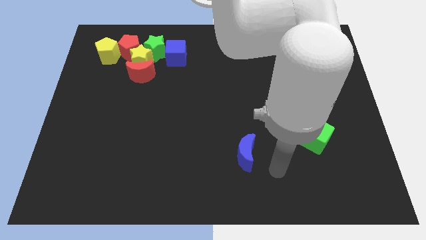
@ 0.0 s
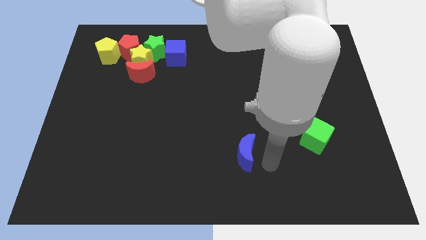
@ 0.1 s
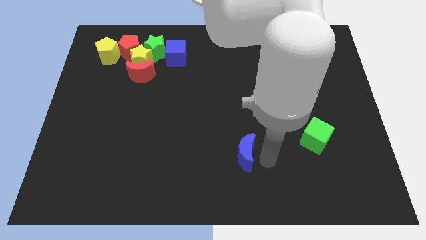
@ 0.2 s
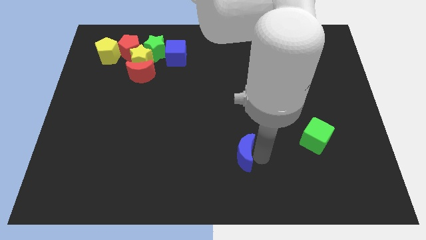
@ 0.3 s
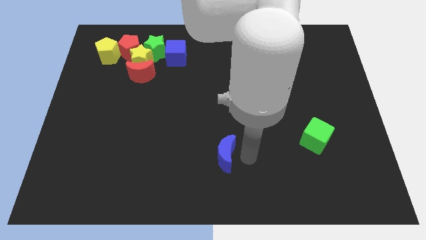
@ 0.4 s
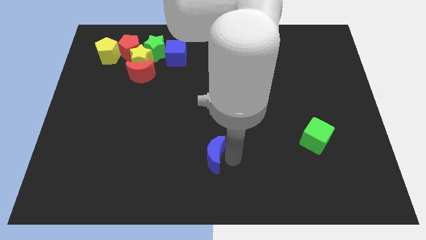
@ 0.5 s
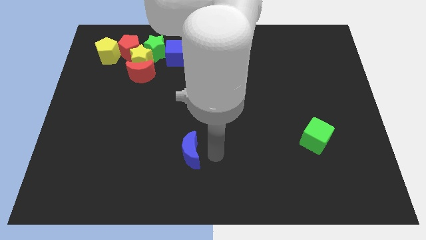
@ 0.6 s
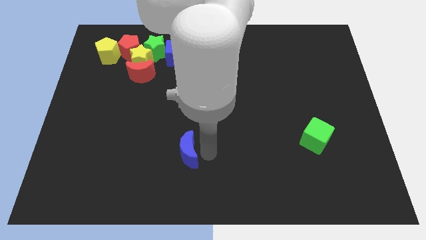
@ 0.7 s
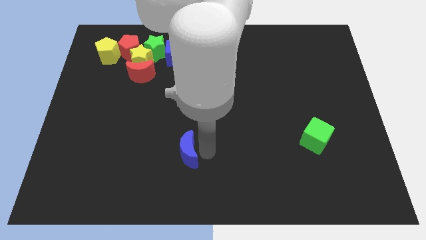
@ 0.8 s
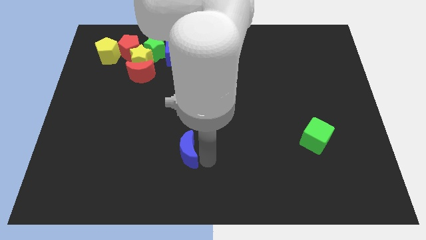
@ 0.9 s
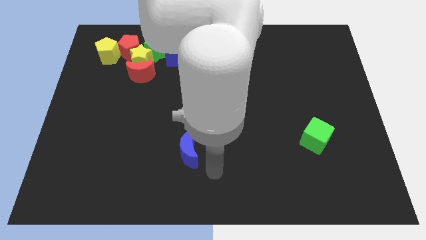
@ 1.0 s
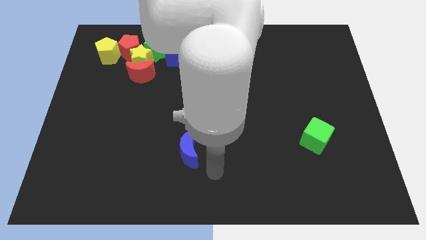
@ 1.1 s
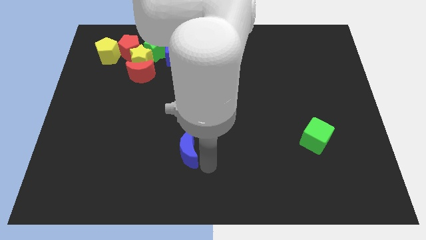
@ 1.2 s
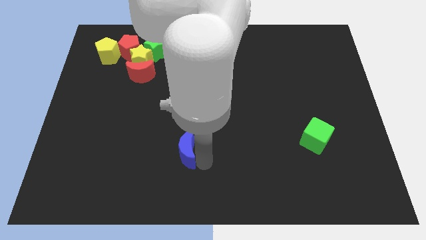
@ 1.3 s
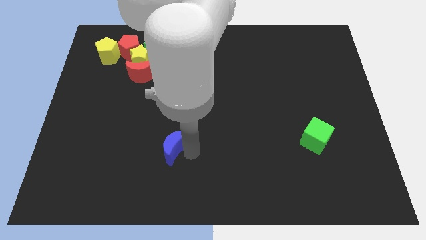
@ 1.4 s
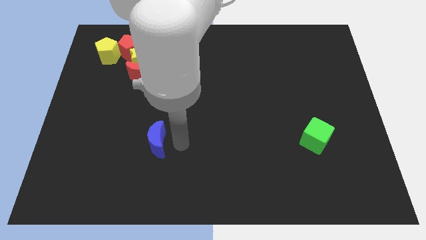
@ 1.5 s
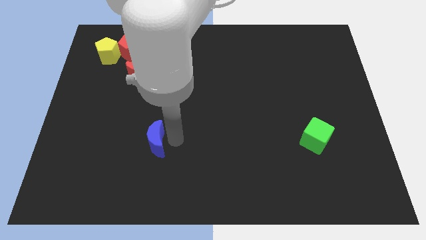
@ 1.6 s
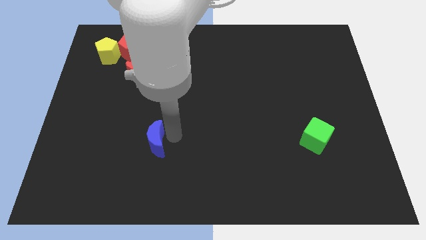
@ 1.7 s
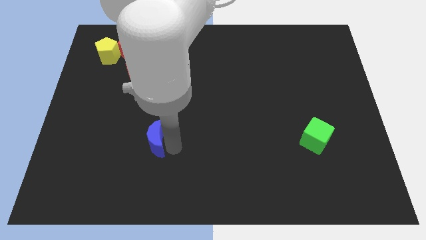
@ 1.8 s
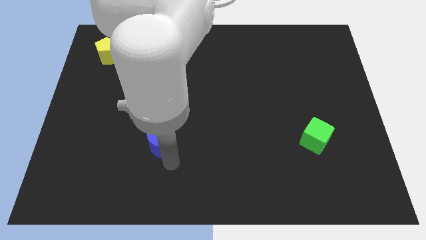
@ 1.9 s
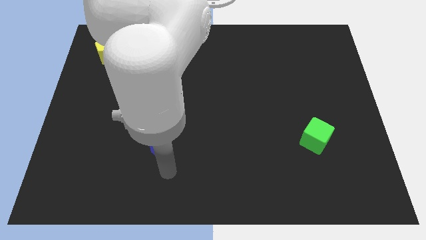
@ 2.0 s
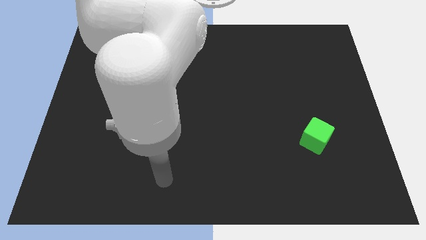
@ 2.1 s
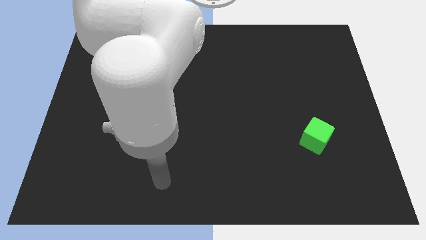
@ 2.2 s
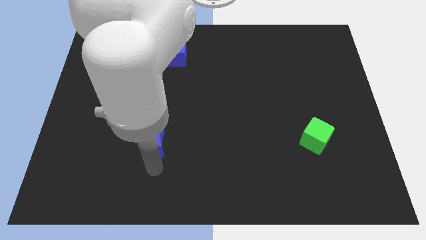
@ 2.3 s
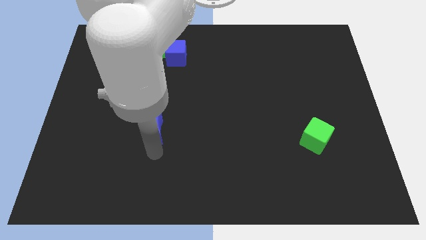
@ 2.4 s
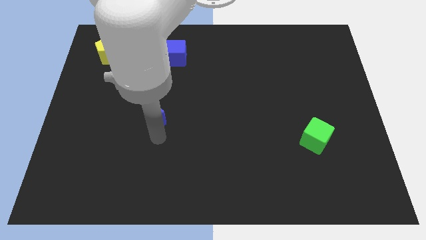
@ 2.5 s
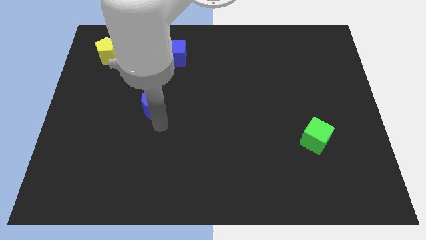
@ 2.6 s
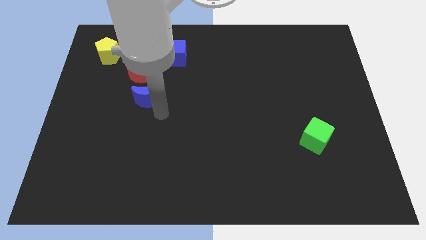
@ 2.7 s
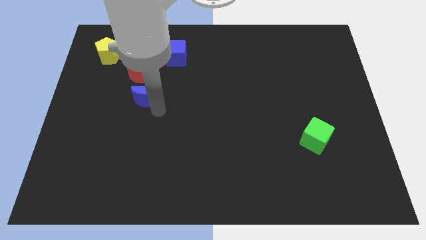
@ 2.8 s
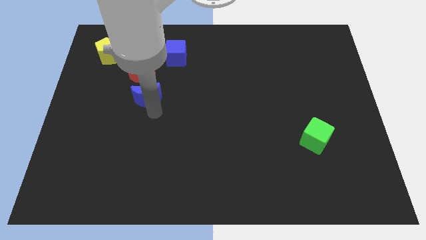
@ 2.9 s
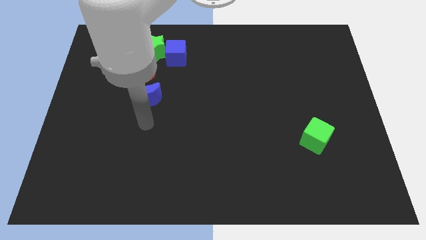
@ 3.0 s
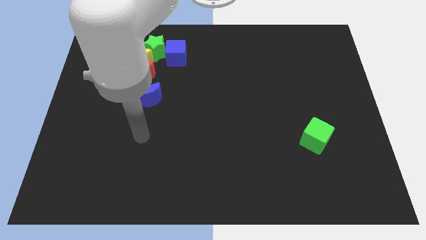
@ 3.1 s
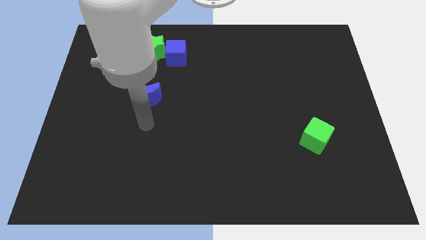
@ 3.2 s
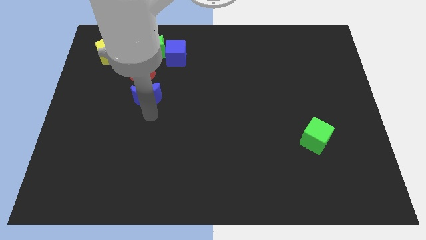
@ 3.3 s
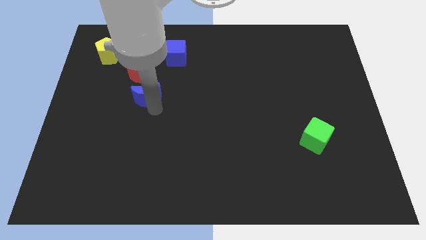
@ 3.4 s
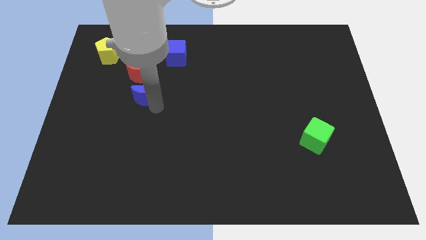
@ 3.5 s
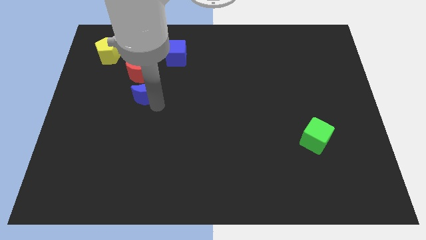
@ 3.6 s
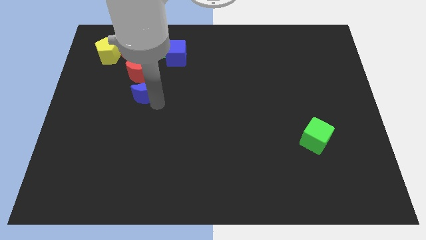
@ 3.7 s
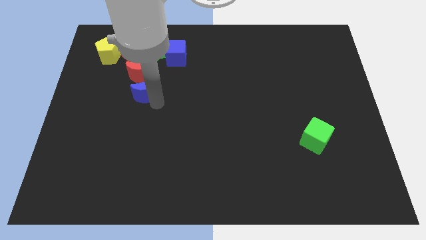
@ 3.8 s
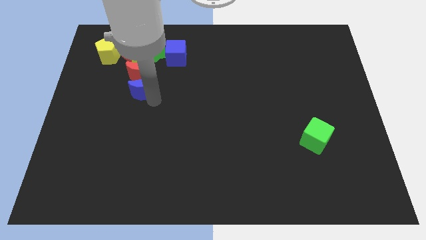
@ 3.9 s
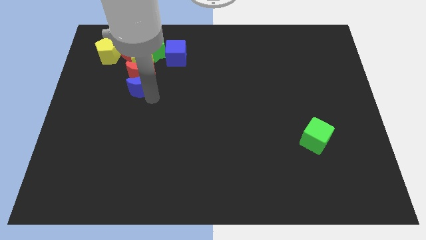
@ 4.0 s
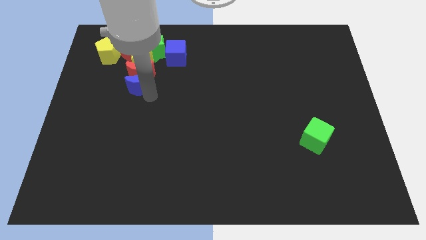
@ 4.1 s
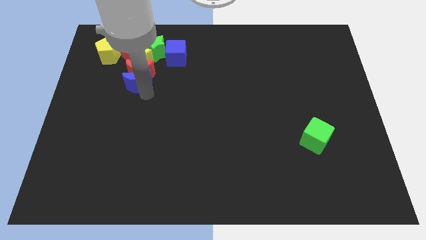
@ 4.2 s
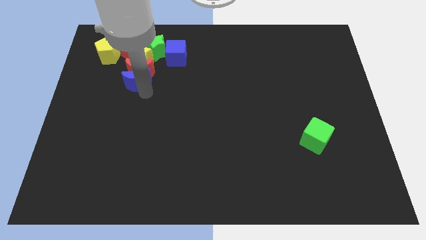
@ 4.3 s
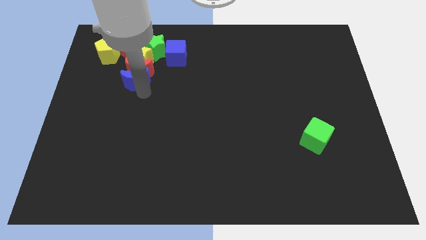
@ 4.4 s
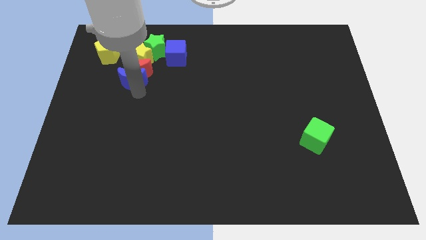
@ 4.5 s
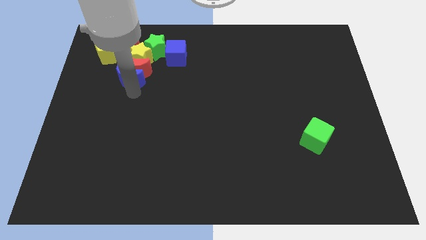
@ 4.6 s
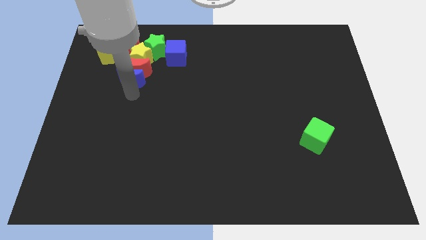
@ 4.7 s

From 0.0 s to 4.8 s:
push blue crescent into the bottom of the red crescent

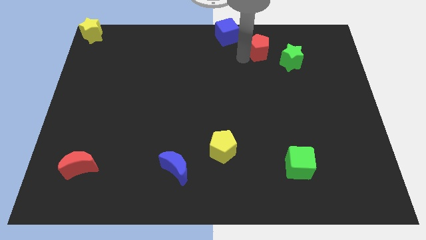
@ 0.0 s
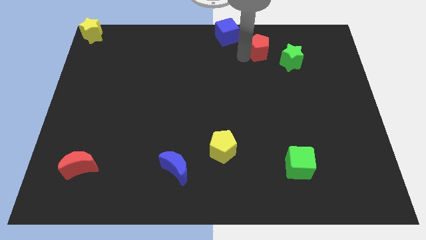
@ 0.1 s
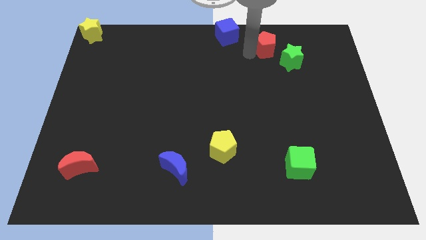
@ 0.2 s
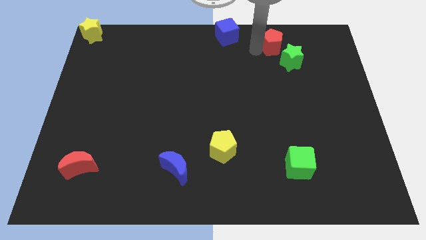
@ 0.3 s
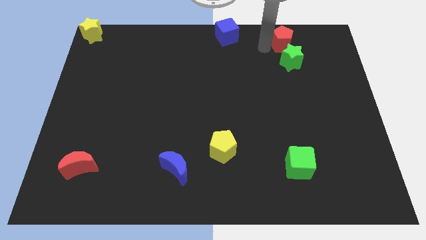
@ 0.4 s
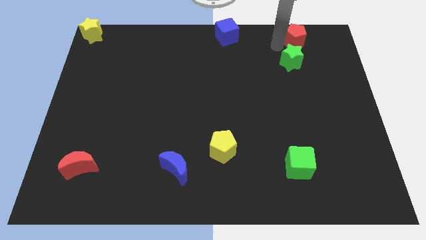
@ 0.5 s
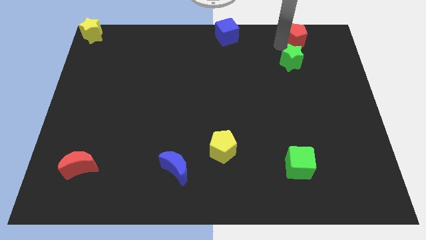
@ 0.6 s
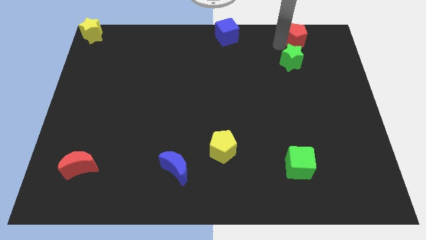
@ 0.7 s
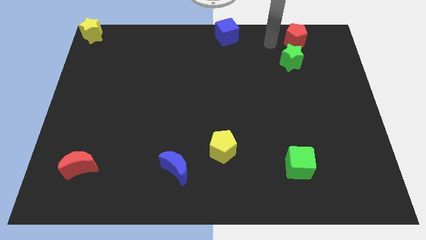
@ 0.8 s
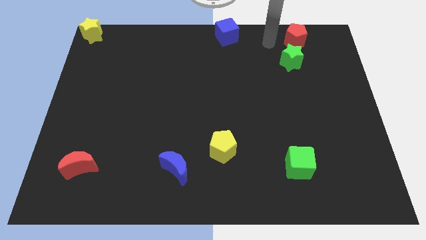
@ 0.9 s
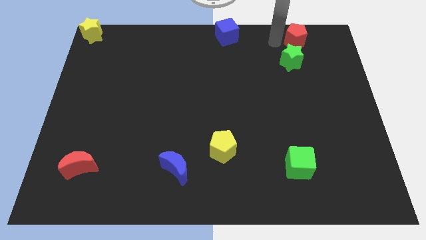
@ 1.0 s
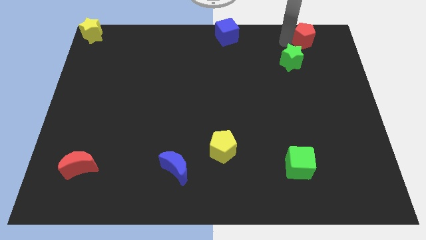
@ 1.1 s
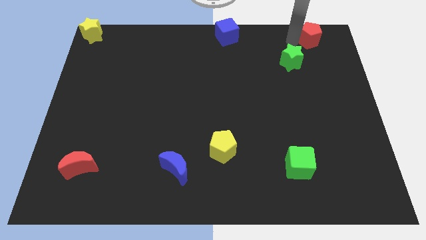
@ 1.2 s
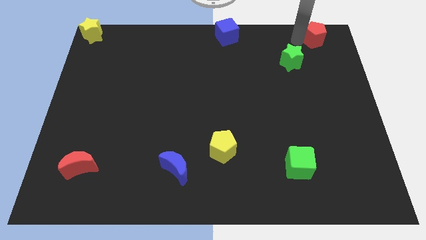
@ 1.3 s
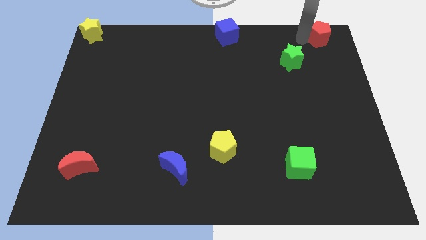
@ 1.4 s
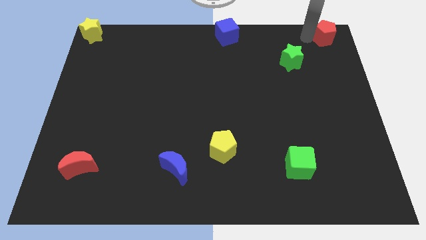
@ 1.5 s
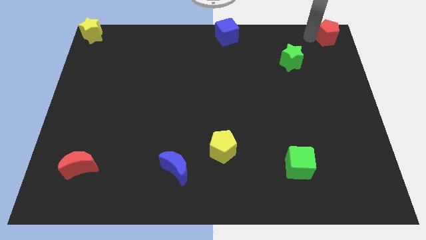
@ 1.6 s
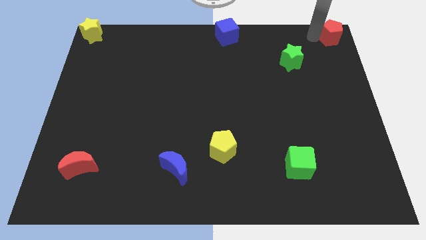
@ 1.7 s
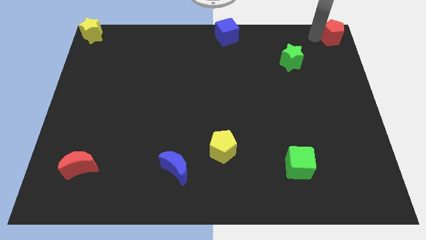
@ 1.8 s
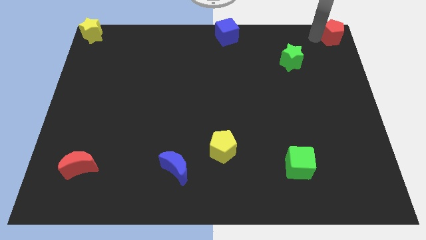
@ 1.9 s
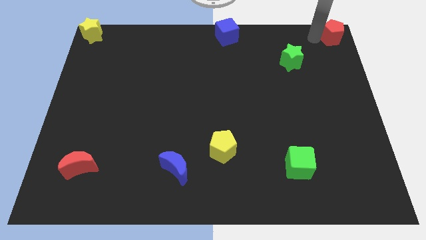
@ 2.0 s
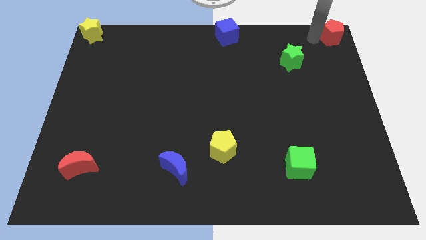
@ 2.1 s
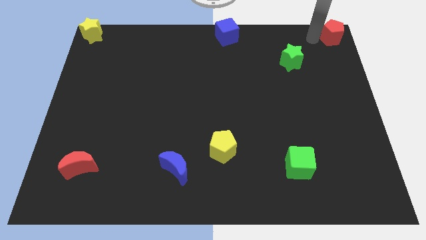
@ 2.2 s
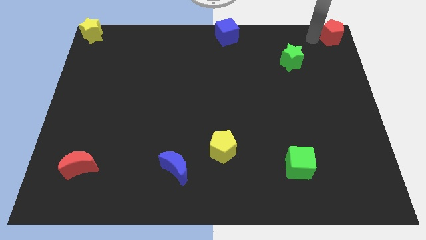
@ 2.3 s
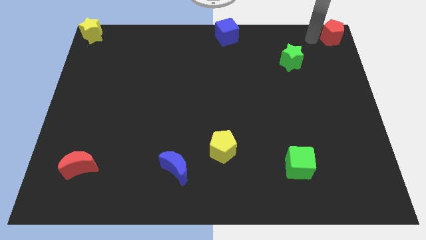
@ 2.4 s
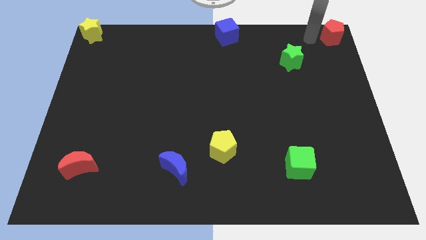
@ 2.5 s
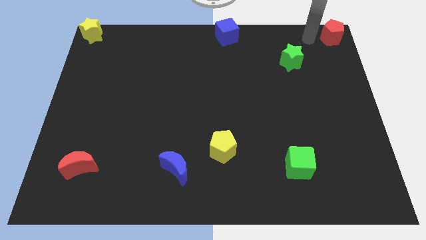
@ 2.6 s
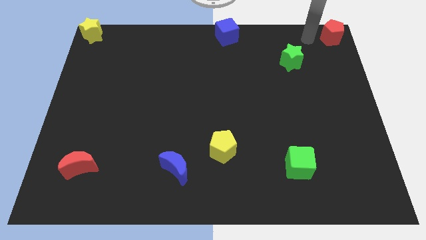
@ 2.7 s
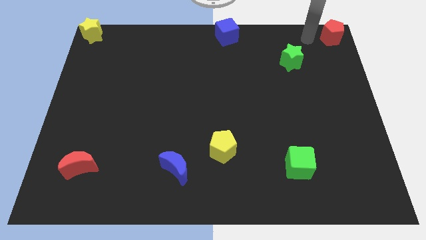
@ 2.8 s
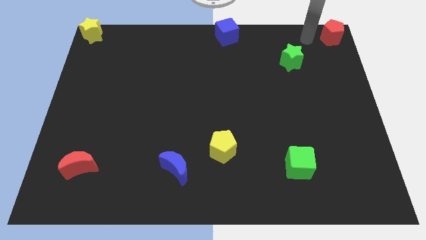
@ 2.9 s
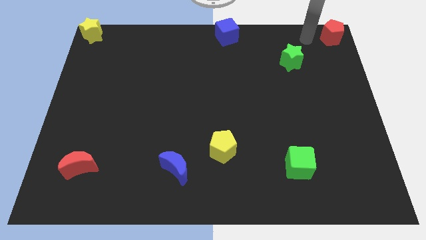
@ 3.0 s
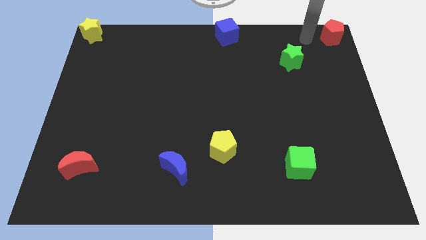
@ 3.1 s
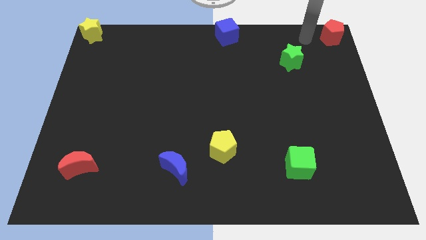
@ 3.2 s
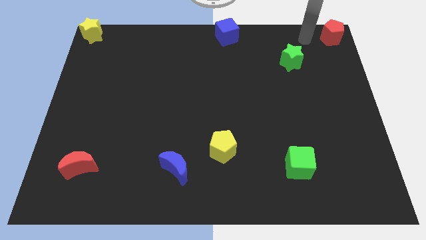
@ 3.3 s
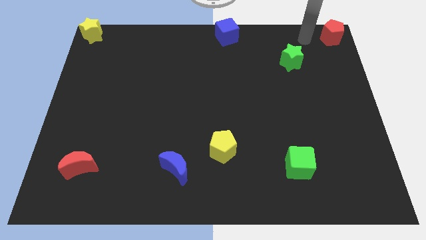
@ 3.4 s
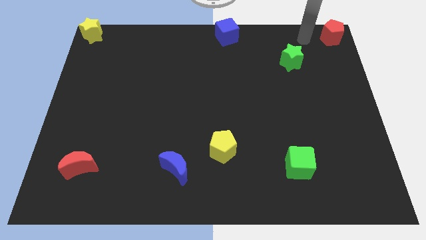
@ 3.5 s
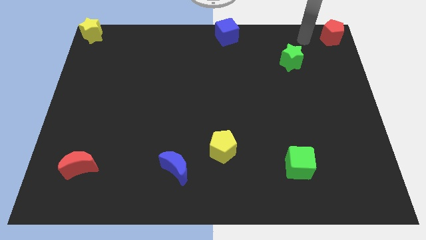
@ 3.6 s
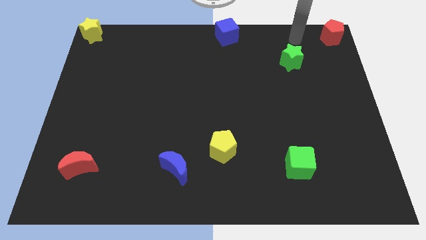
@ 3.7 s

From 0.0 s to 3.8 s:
place red pentagon to the top right corner of the board

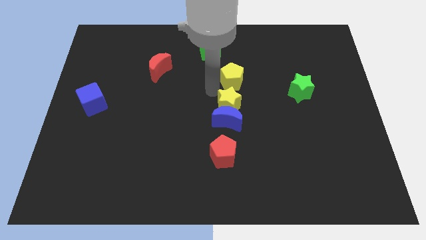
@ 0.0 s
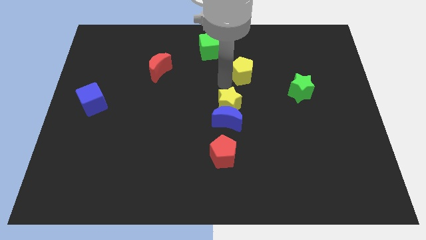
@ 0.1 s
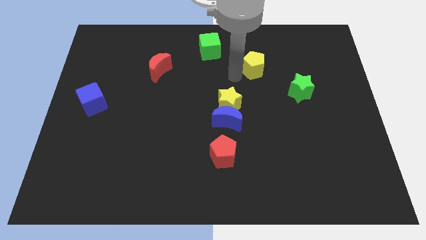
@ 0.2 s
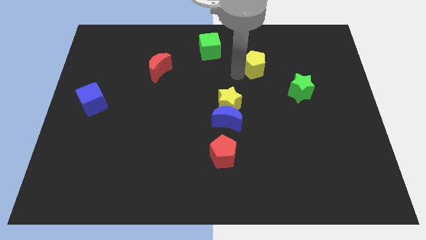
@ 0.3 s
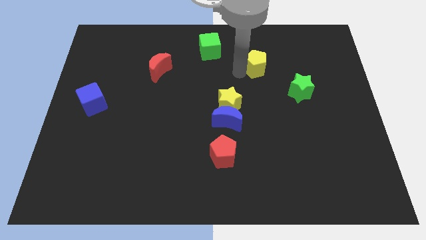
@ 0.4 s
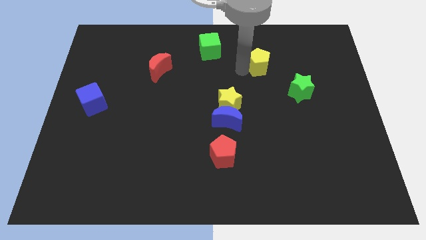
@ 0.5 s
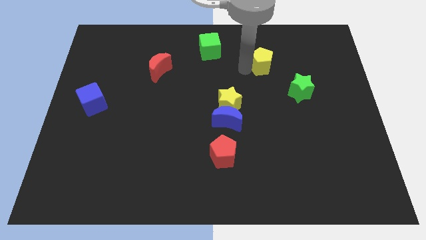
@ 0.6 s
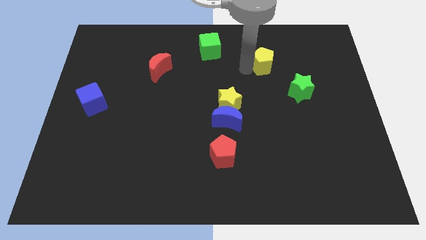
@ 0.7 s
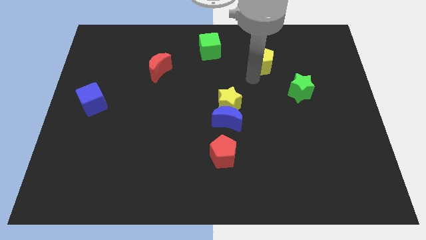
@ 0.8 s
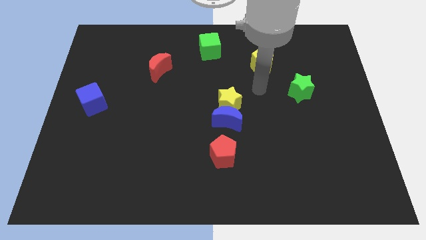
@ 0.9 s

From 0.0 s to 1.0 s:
separate the yellow pentagon from the group of blocks
